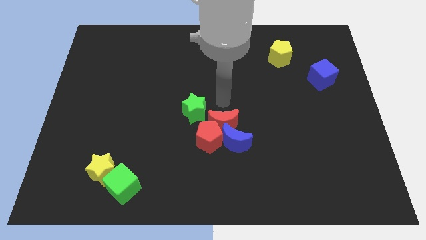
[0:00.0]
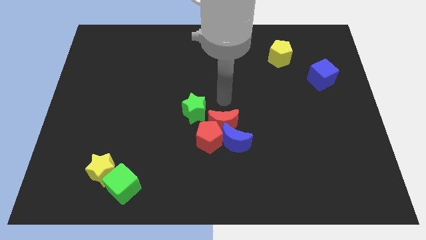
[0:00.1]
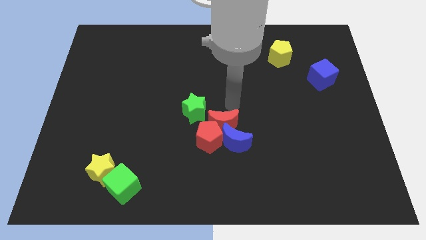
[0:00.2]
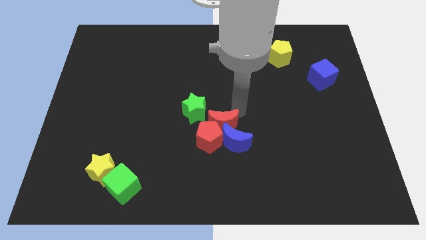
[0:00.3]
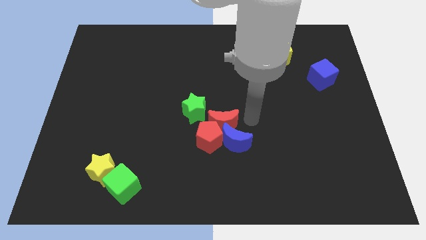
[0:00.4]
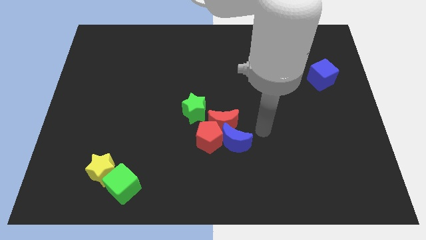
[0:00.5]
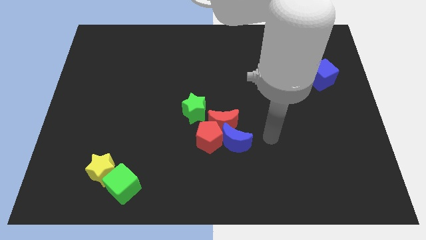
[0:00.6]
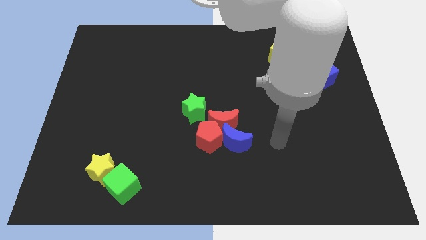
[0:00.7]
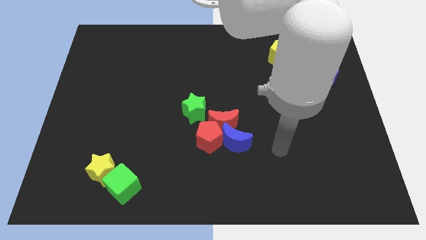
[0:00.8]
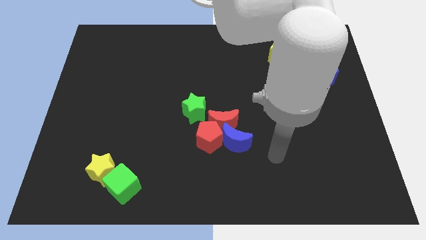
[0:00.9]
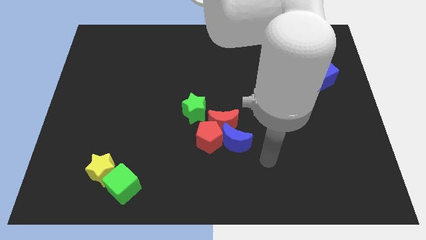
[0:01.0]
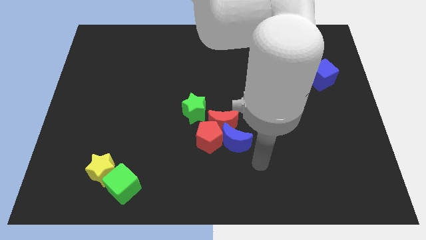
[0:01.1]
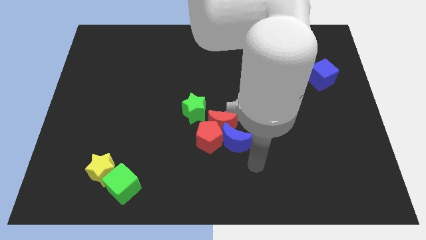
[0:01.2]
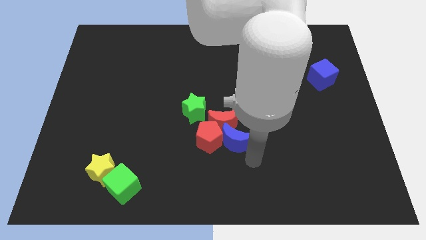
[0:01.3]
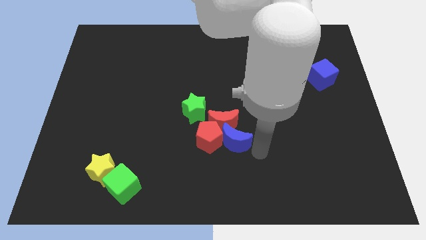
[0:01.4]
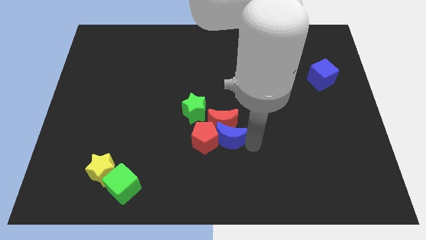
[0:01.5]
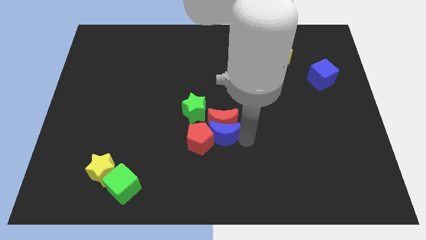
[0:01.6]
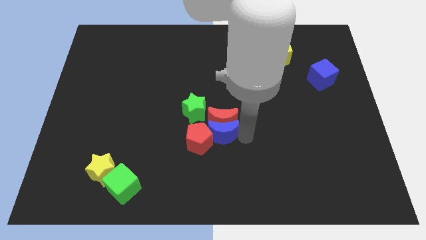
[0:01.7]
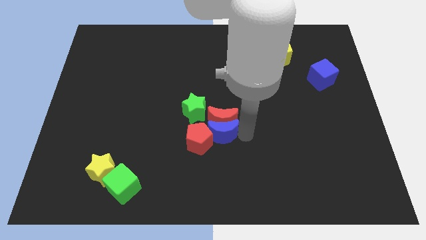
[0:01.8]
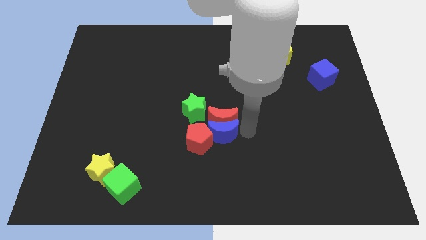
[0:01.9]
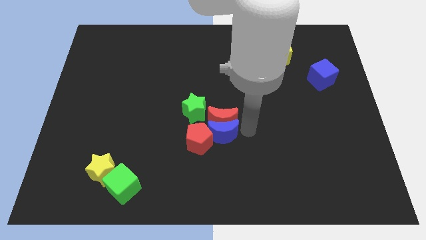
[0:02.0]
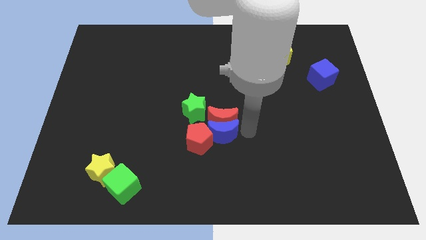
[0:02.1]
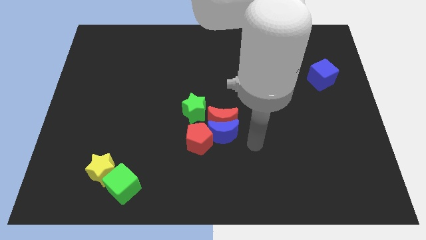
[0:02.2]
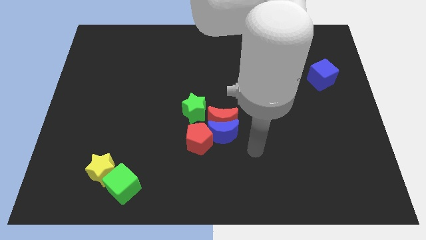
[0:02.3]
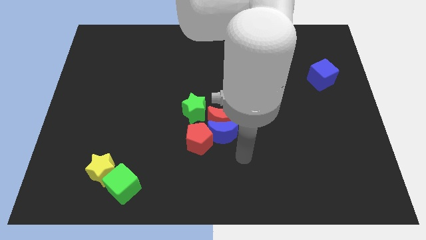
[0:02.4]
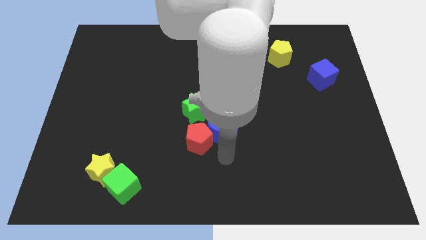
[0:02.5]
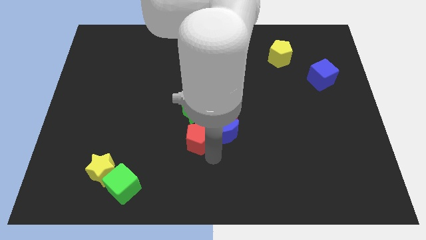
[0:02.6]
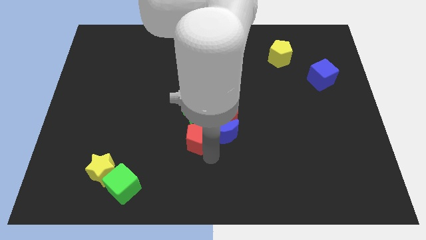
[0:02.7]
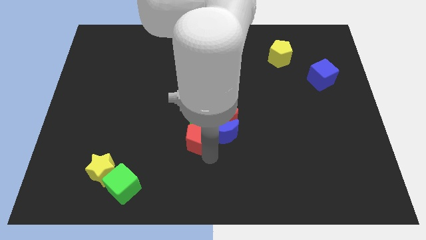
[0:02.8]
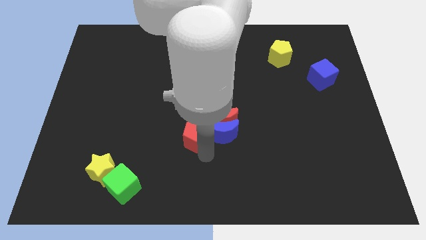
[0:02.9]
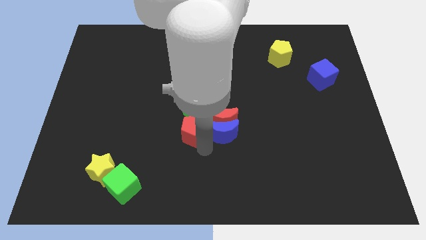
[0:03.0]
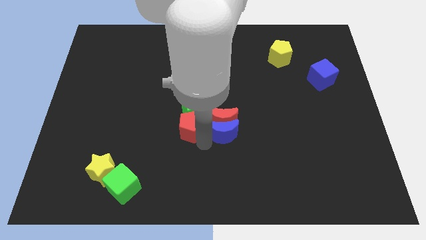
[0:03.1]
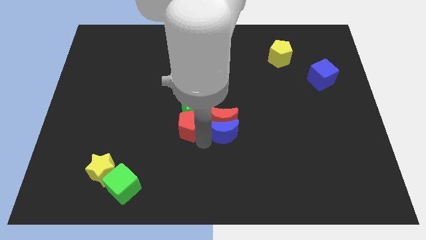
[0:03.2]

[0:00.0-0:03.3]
push the blue moon and red pentagon towards the top

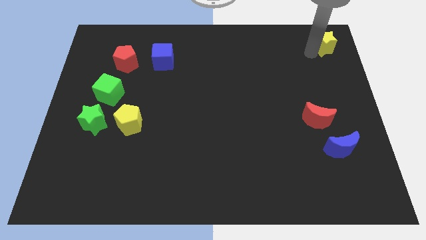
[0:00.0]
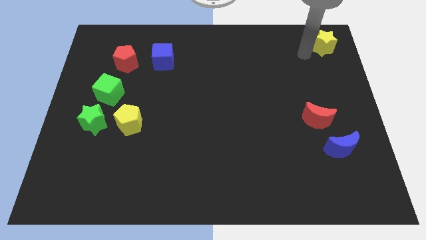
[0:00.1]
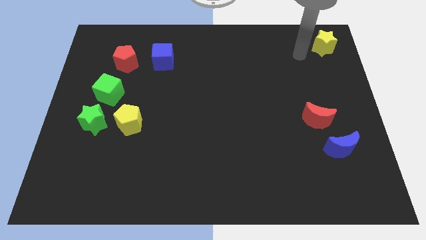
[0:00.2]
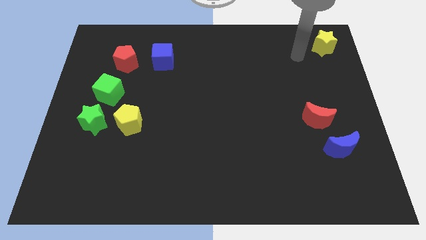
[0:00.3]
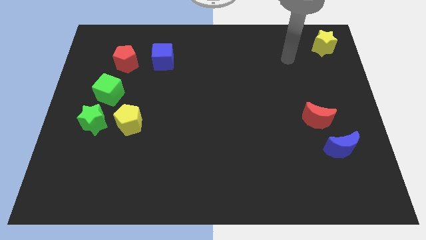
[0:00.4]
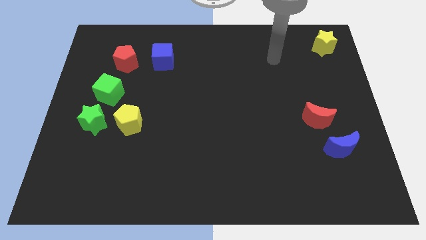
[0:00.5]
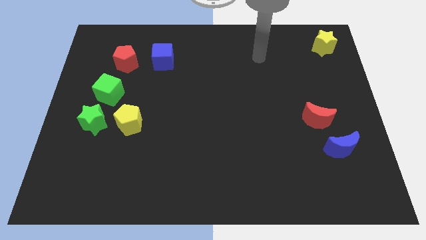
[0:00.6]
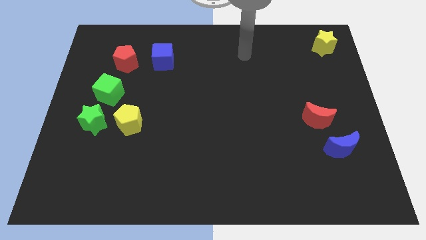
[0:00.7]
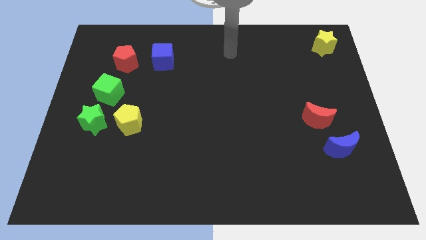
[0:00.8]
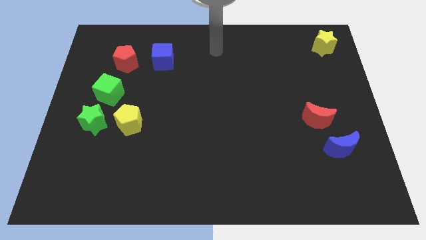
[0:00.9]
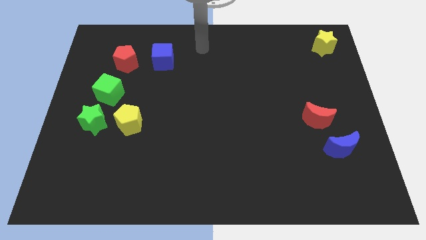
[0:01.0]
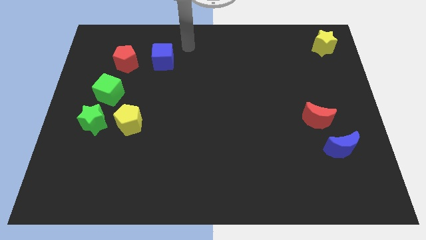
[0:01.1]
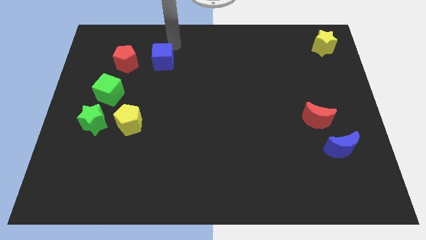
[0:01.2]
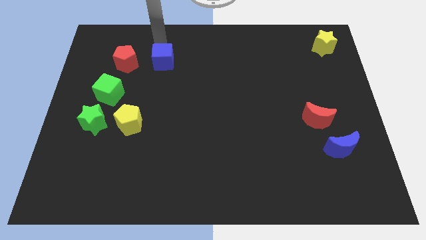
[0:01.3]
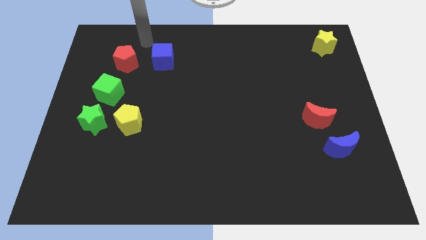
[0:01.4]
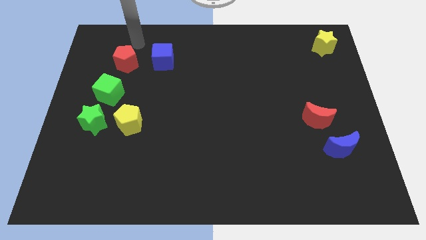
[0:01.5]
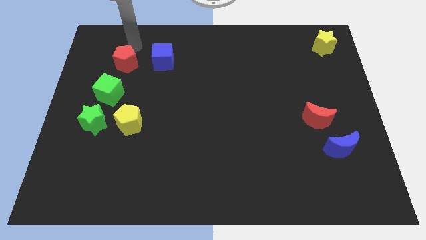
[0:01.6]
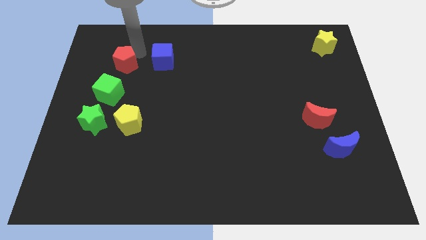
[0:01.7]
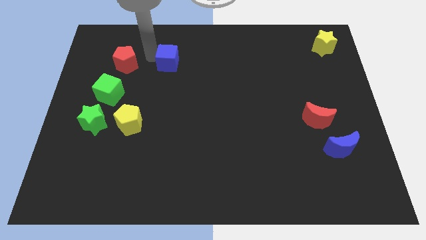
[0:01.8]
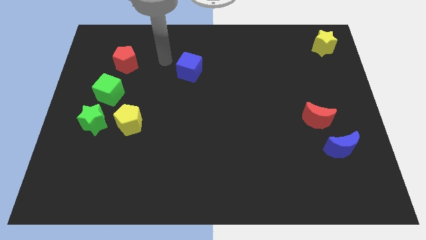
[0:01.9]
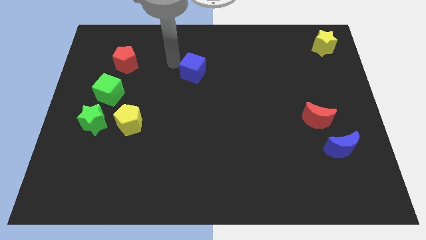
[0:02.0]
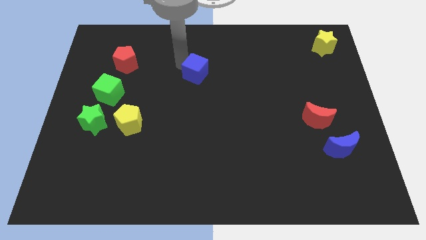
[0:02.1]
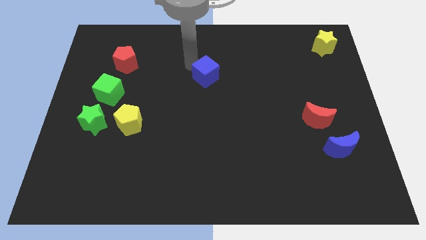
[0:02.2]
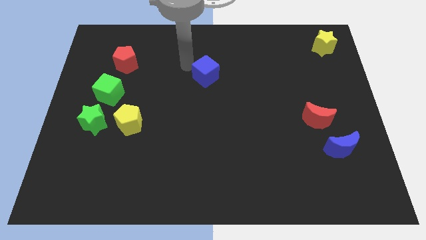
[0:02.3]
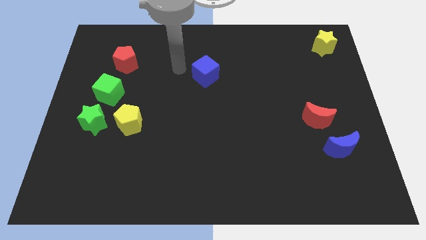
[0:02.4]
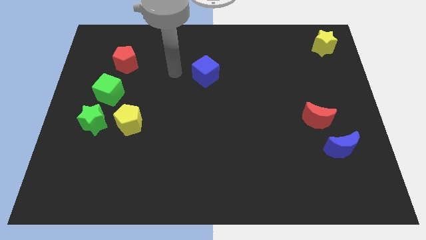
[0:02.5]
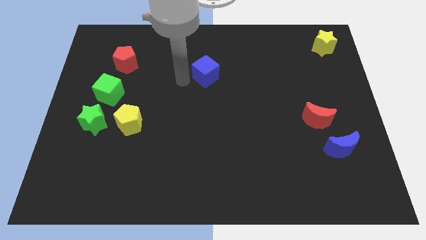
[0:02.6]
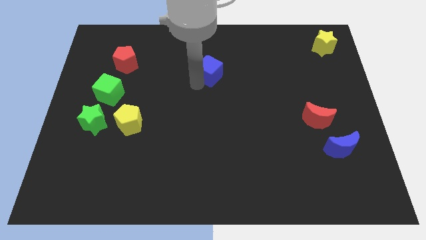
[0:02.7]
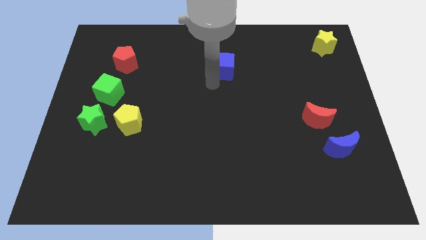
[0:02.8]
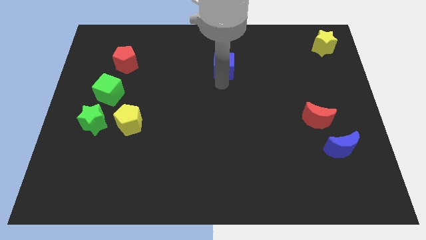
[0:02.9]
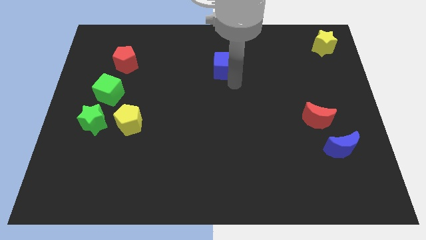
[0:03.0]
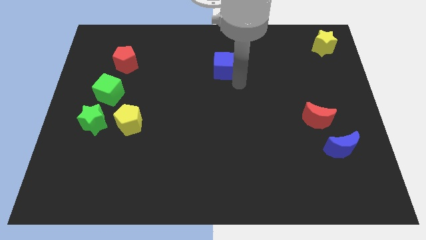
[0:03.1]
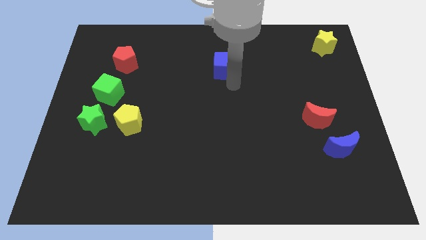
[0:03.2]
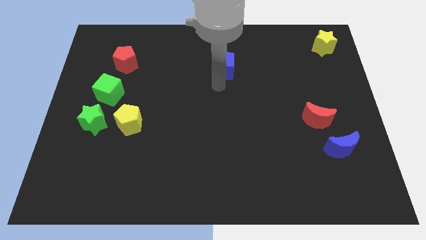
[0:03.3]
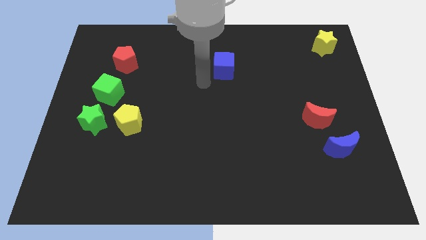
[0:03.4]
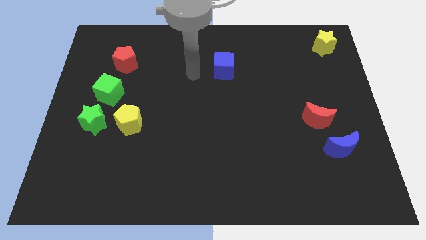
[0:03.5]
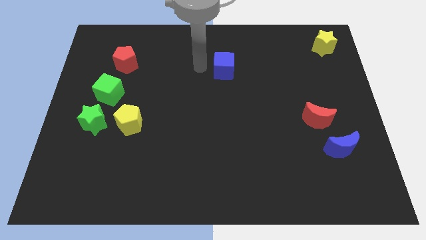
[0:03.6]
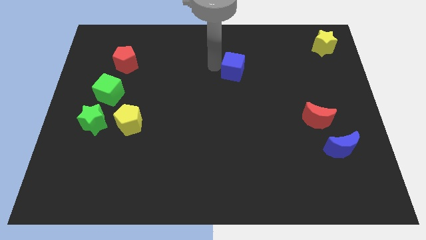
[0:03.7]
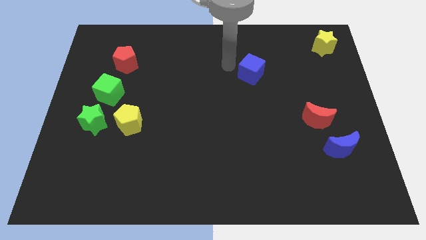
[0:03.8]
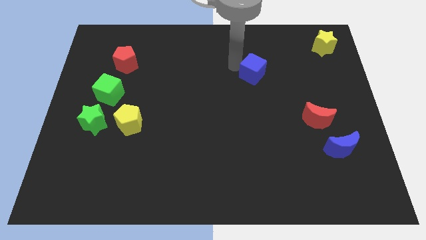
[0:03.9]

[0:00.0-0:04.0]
push the blue cube towards the right side of the board

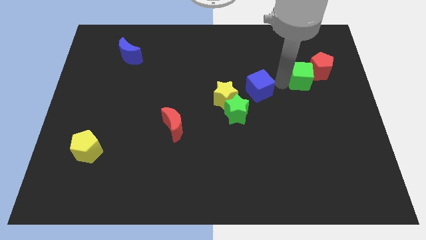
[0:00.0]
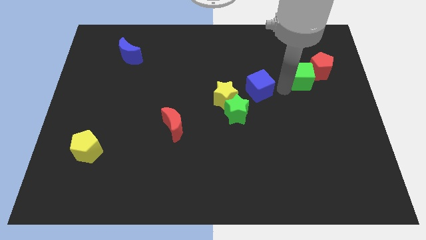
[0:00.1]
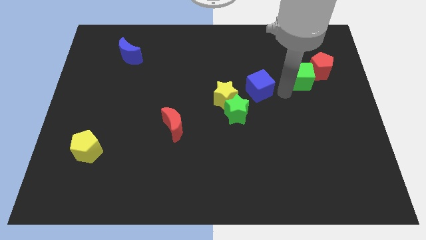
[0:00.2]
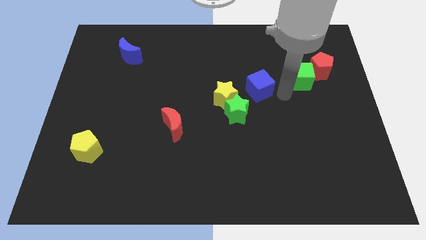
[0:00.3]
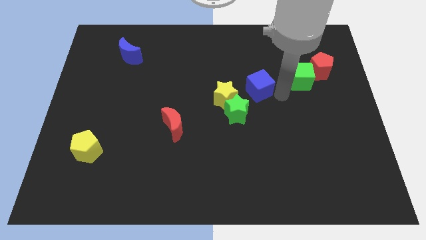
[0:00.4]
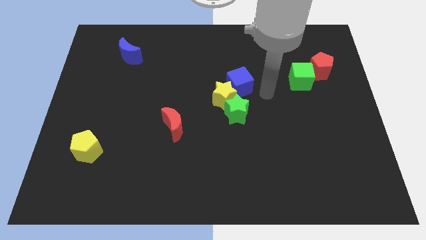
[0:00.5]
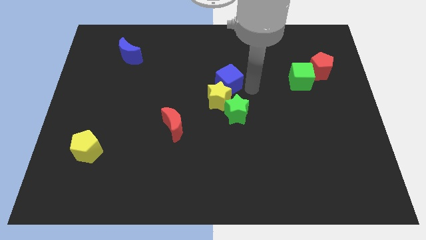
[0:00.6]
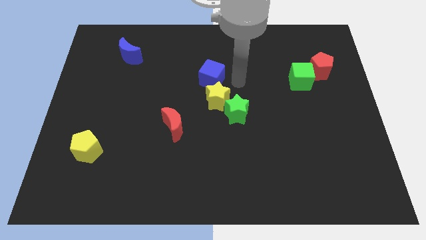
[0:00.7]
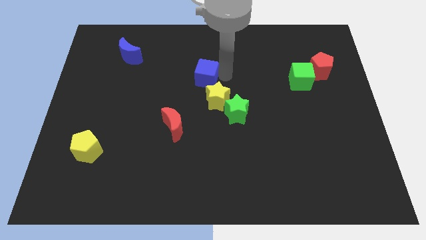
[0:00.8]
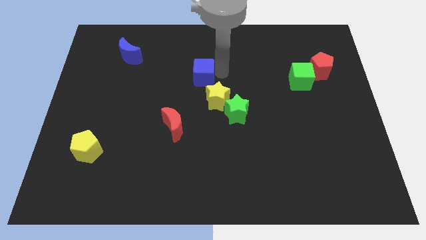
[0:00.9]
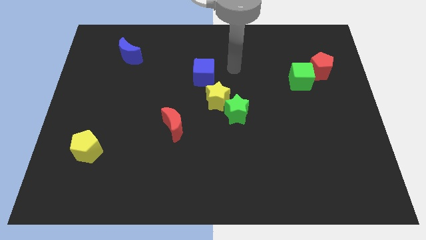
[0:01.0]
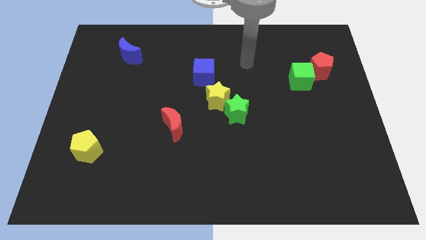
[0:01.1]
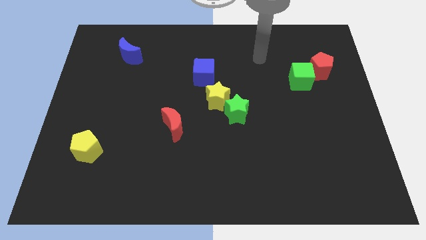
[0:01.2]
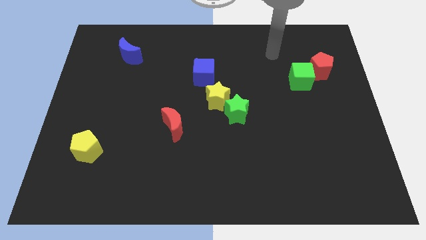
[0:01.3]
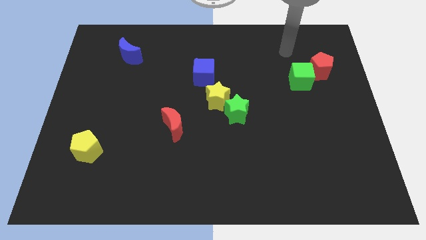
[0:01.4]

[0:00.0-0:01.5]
place the blue cube diagonally top right to the red moon

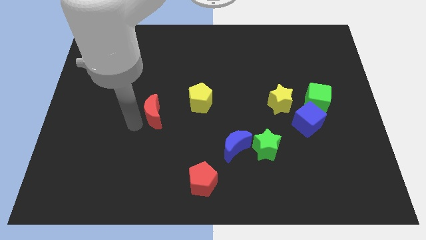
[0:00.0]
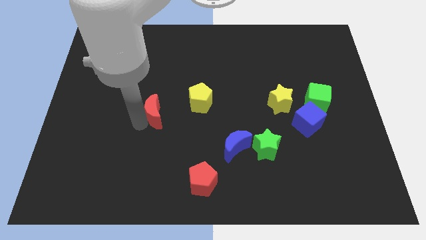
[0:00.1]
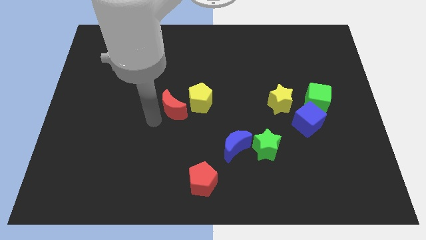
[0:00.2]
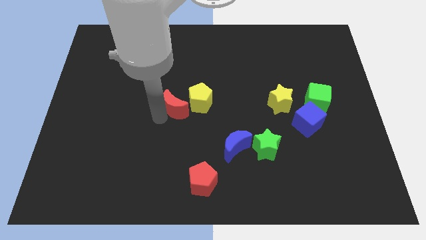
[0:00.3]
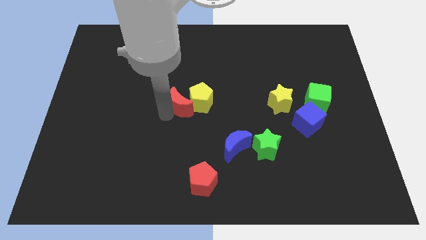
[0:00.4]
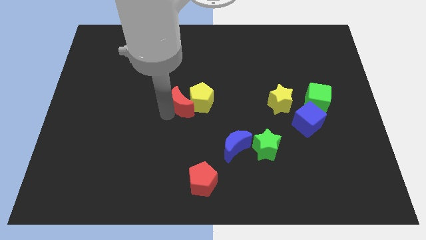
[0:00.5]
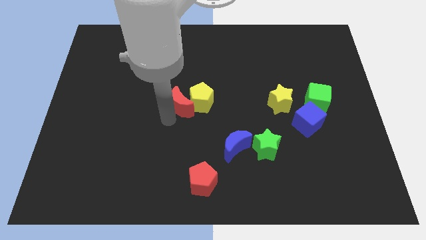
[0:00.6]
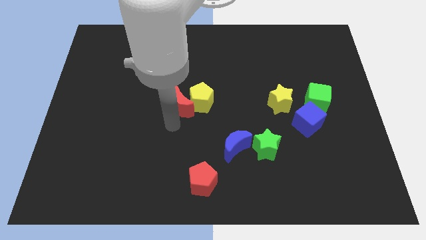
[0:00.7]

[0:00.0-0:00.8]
push the red crescent to the left of the yellow pentagon
